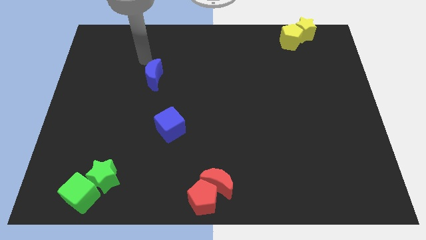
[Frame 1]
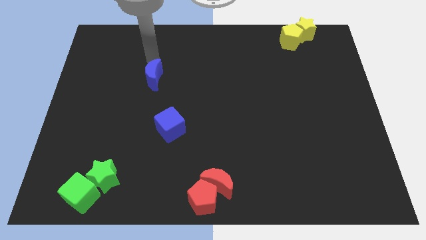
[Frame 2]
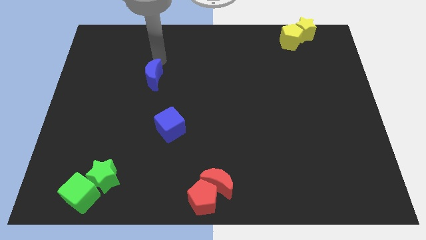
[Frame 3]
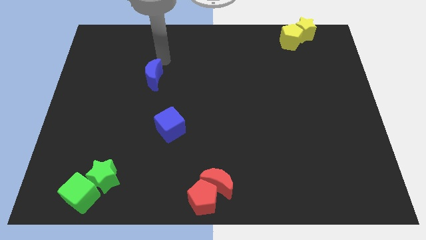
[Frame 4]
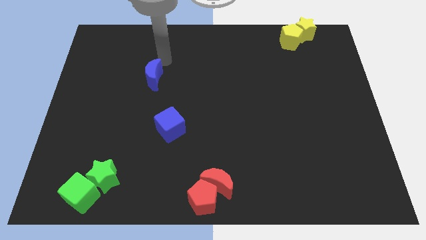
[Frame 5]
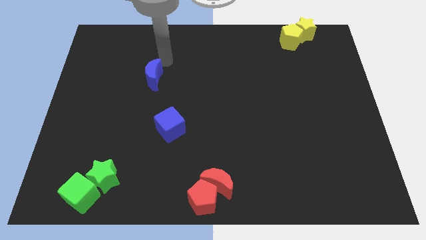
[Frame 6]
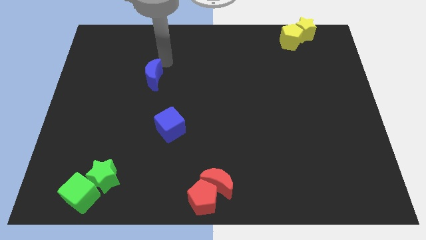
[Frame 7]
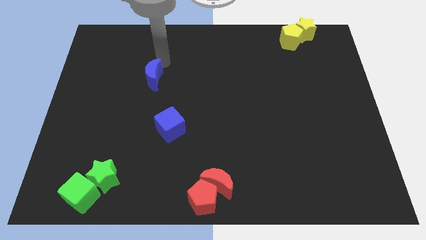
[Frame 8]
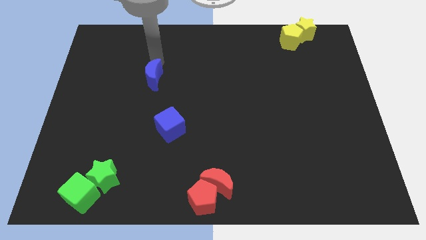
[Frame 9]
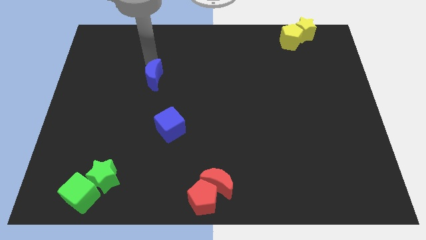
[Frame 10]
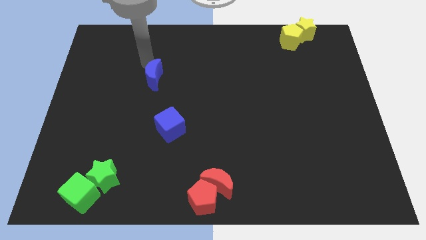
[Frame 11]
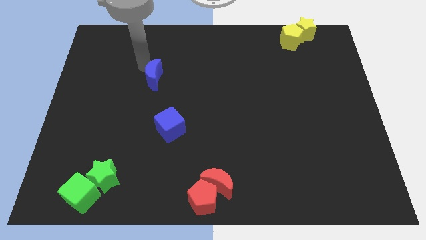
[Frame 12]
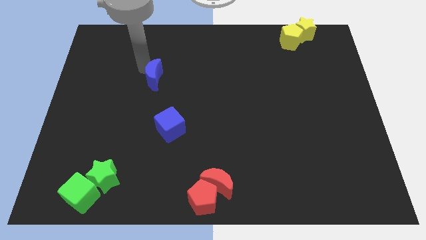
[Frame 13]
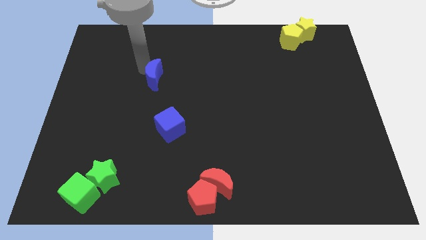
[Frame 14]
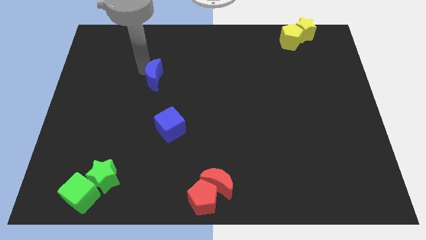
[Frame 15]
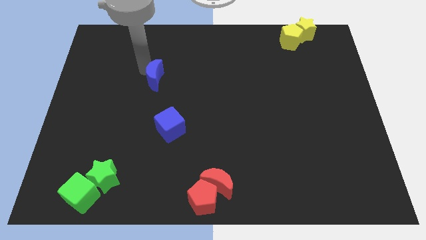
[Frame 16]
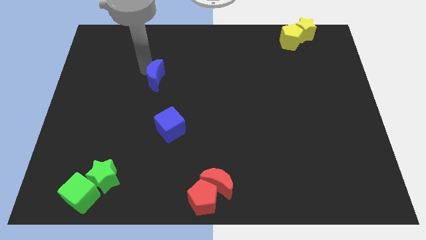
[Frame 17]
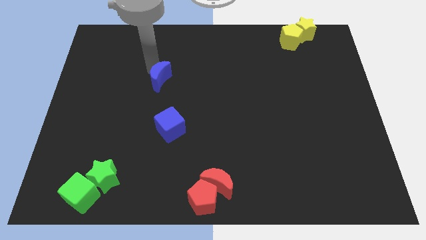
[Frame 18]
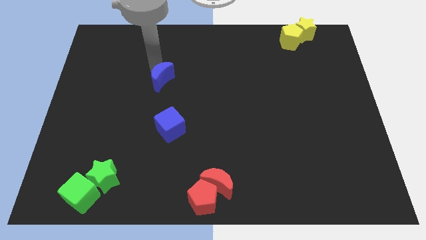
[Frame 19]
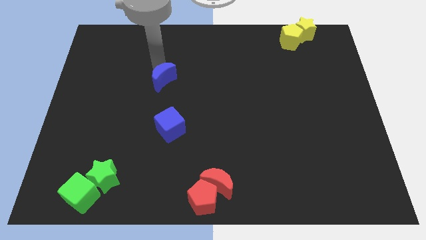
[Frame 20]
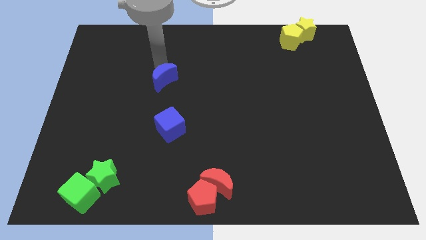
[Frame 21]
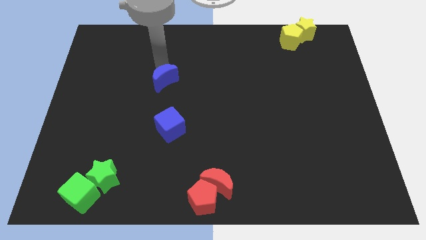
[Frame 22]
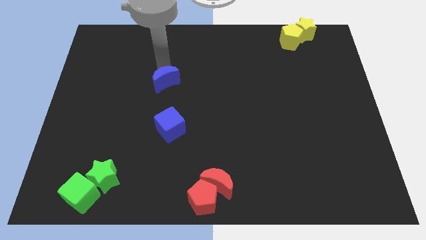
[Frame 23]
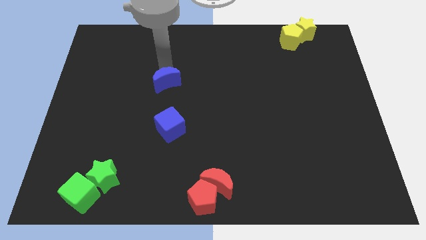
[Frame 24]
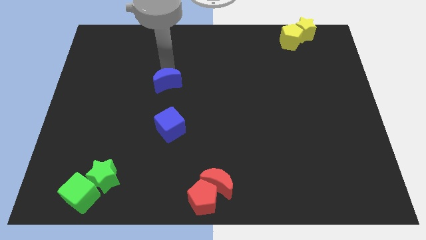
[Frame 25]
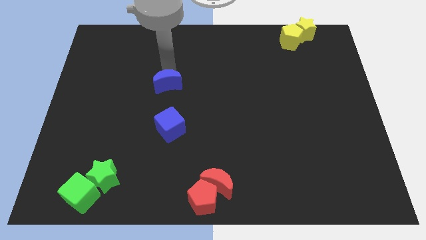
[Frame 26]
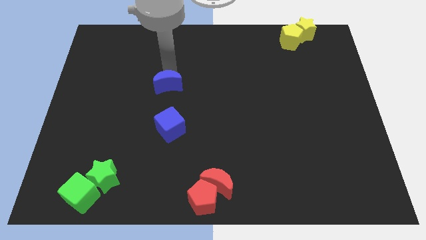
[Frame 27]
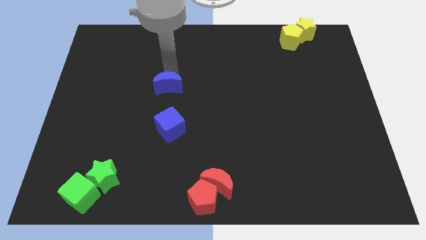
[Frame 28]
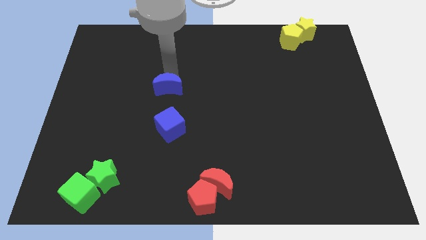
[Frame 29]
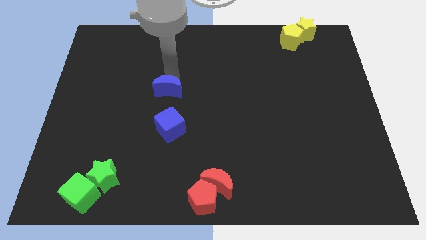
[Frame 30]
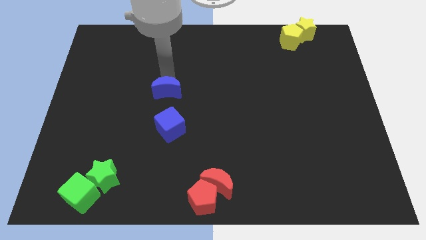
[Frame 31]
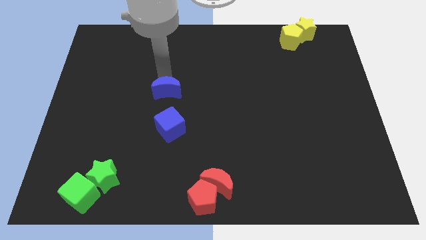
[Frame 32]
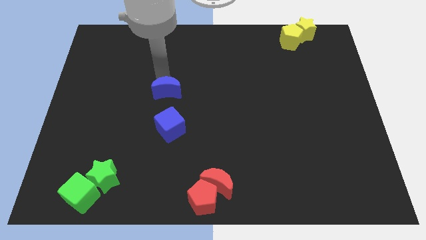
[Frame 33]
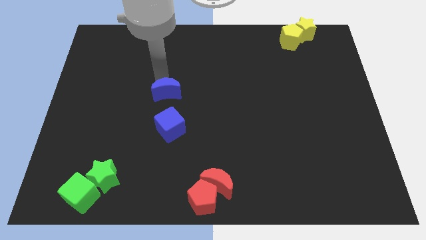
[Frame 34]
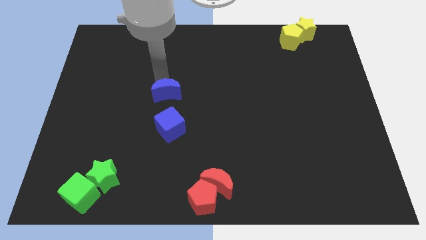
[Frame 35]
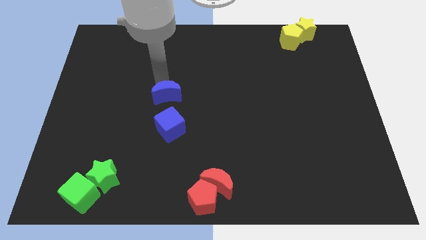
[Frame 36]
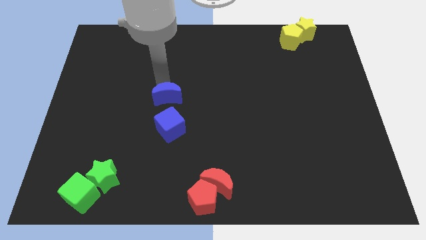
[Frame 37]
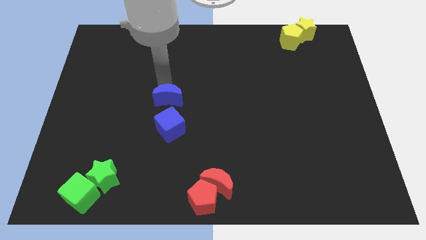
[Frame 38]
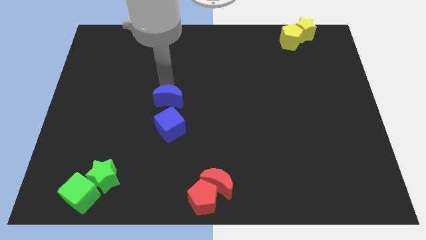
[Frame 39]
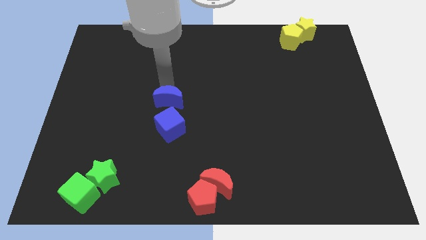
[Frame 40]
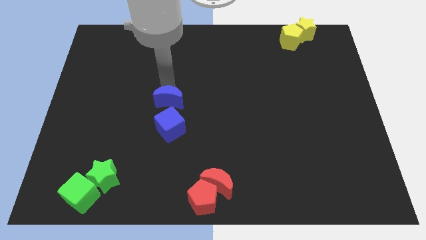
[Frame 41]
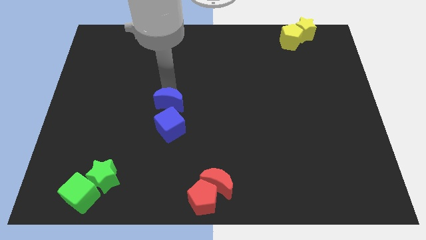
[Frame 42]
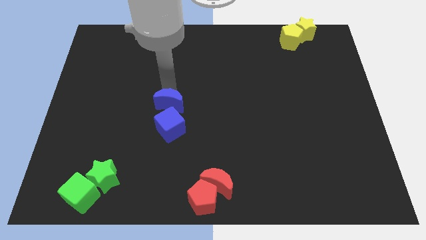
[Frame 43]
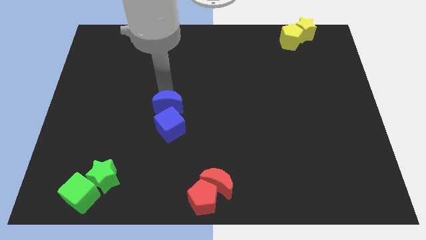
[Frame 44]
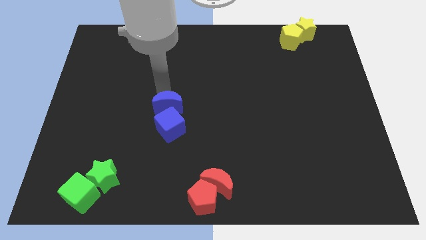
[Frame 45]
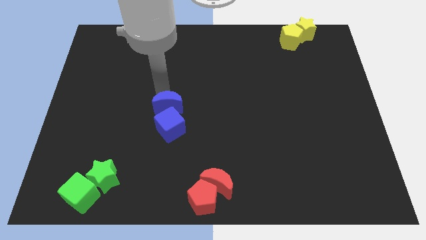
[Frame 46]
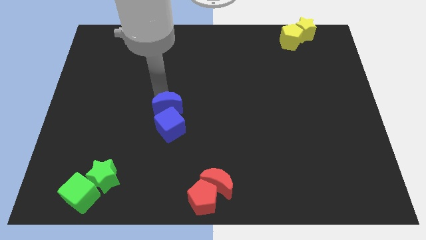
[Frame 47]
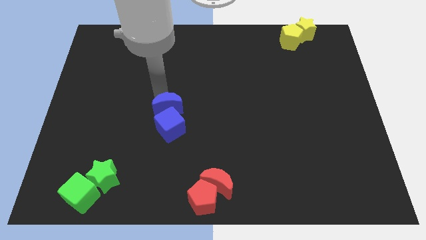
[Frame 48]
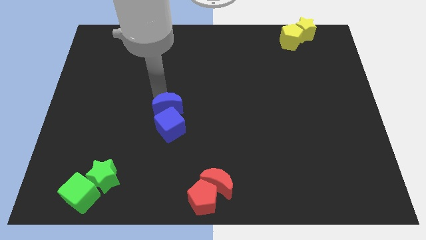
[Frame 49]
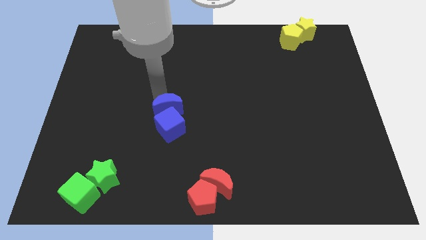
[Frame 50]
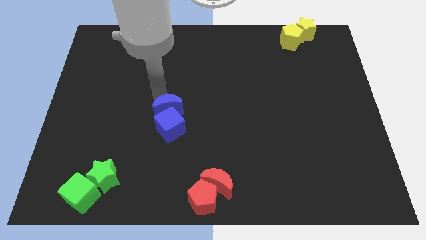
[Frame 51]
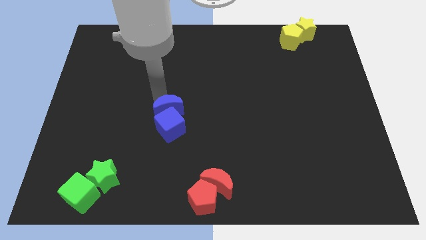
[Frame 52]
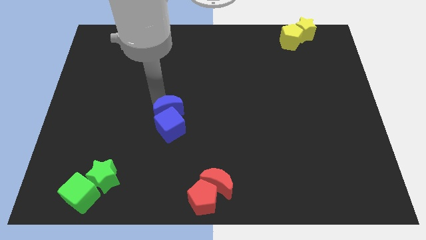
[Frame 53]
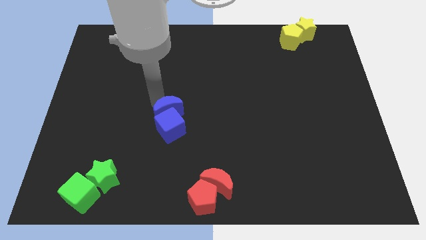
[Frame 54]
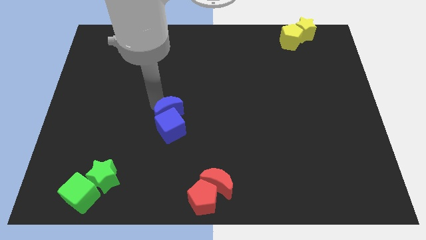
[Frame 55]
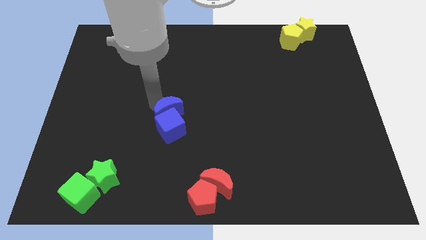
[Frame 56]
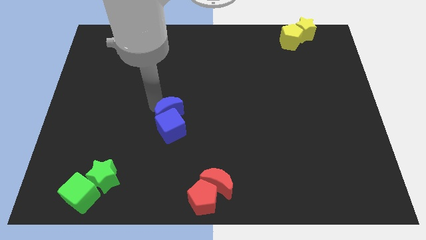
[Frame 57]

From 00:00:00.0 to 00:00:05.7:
move the blue crescent into the blue cube

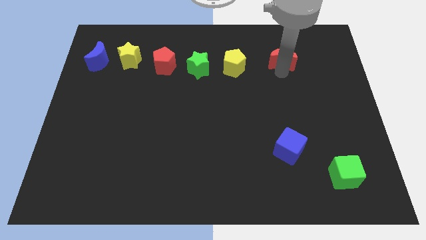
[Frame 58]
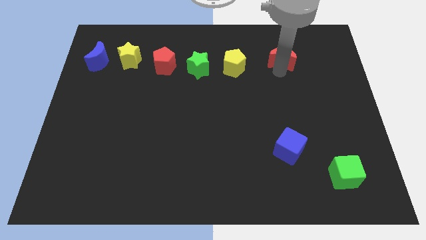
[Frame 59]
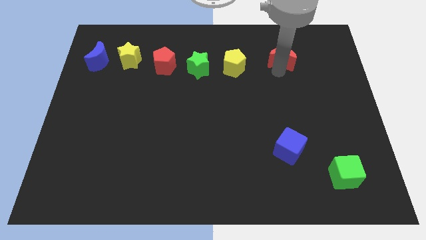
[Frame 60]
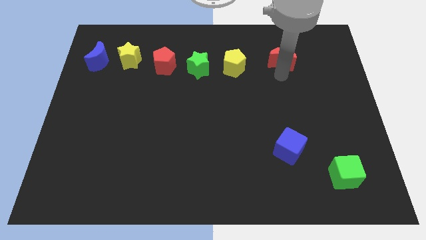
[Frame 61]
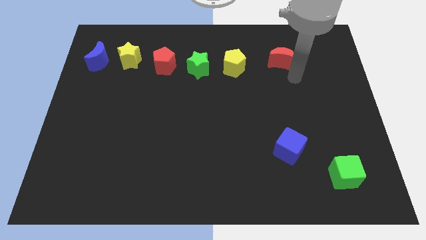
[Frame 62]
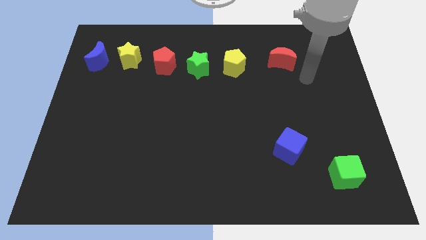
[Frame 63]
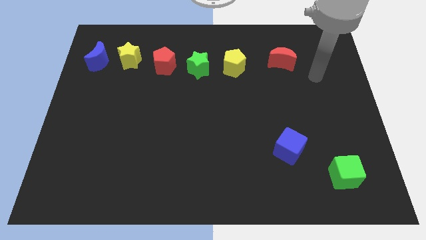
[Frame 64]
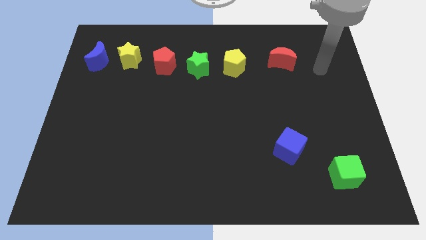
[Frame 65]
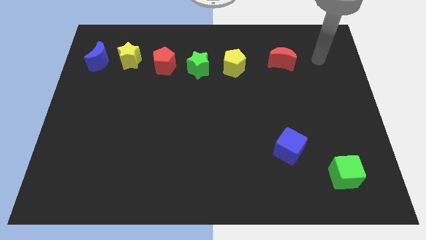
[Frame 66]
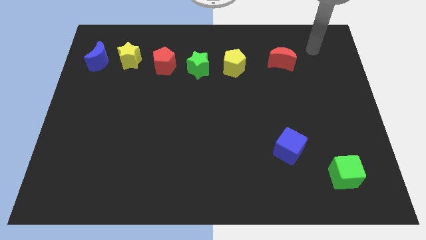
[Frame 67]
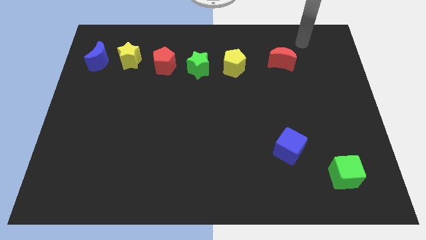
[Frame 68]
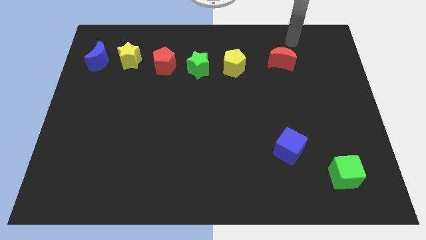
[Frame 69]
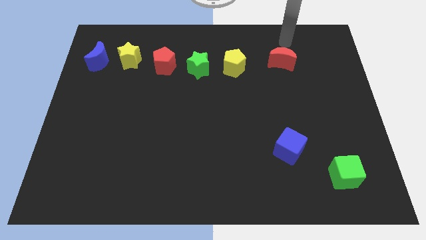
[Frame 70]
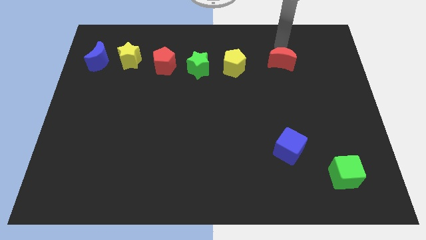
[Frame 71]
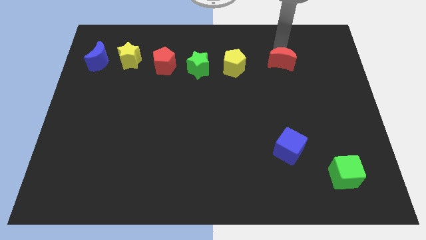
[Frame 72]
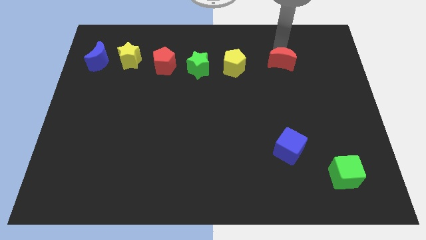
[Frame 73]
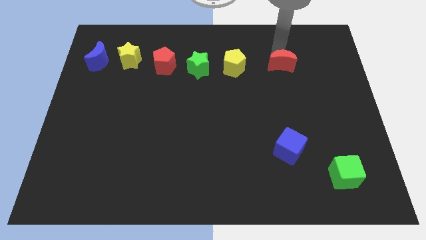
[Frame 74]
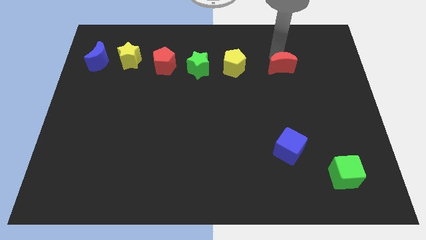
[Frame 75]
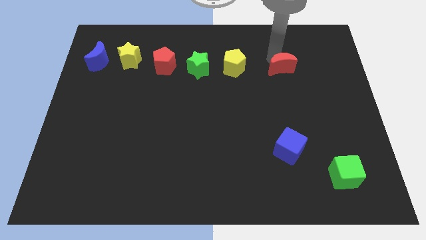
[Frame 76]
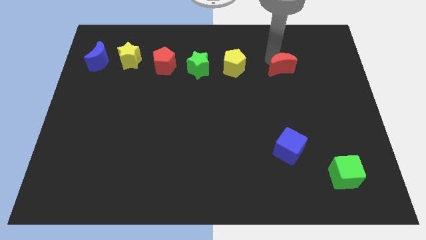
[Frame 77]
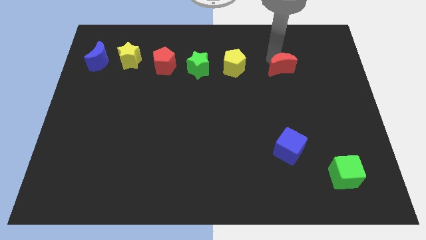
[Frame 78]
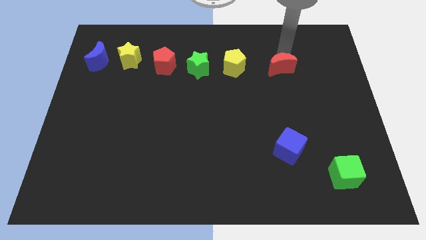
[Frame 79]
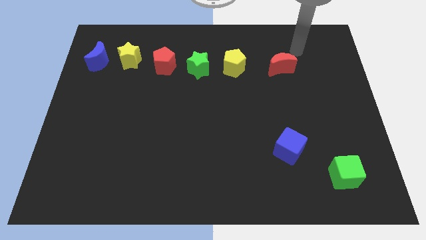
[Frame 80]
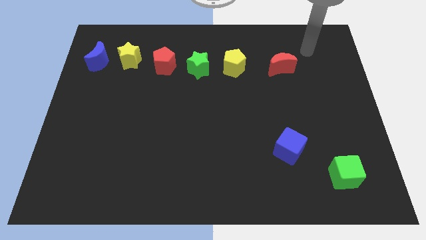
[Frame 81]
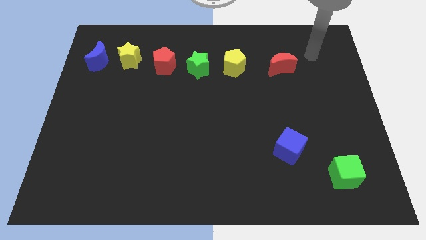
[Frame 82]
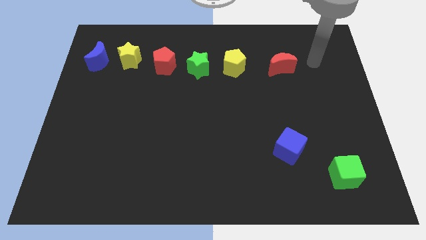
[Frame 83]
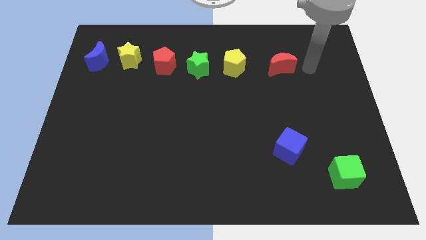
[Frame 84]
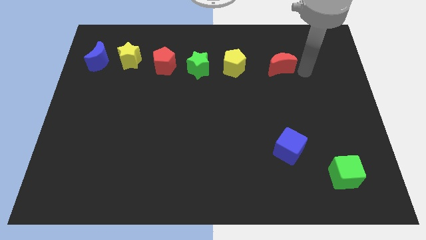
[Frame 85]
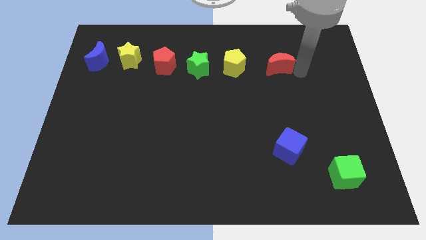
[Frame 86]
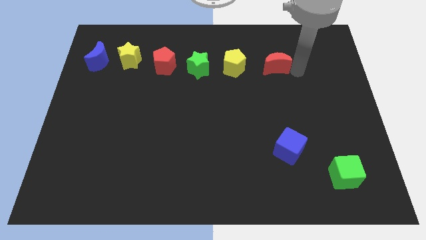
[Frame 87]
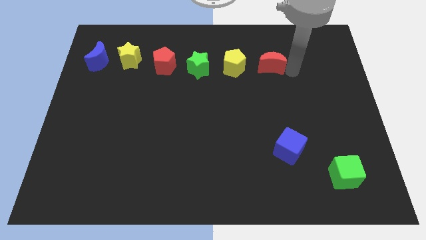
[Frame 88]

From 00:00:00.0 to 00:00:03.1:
adjust red crescent slightly

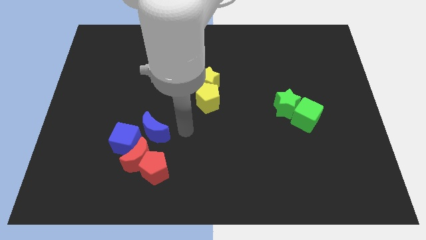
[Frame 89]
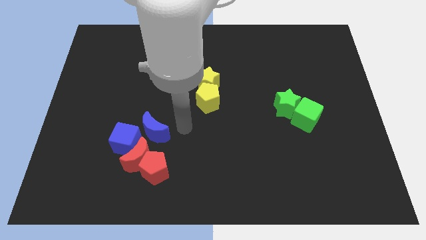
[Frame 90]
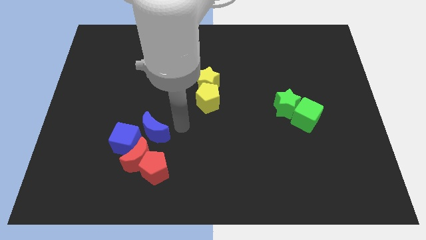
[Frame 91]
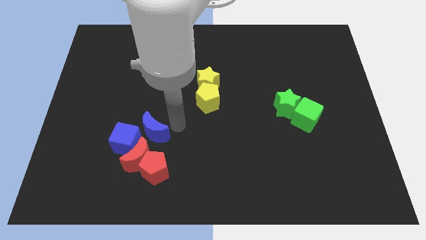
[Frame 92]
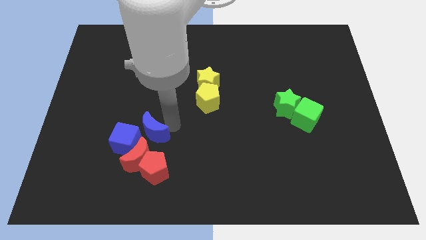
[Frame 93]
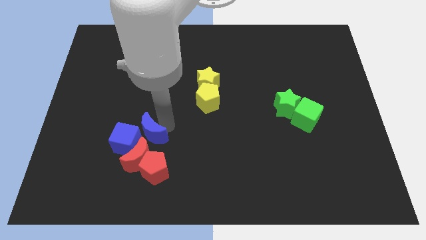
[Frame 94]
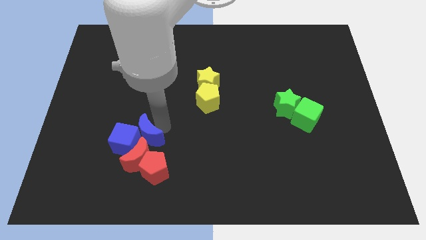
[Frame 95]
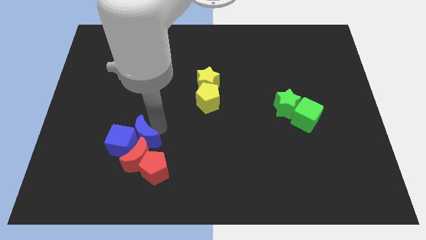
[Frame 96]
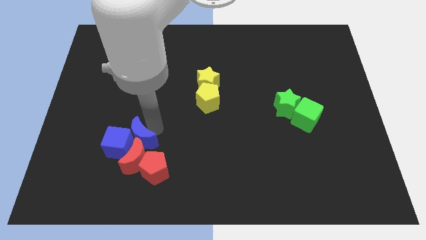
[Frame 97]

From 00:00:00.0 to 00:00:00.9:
push the blue crescent into blue cube and red crescent
